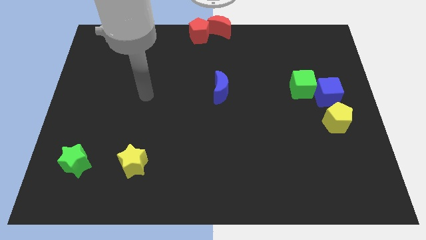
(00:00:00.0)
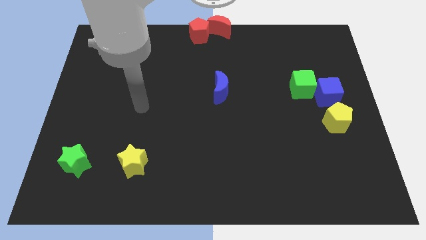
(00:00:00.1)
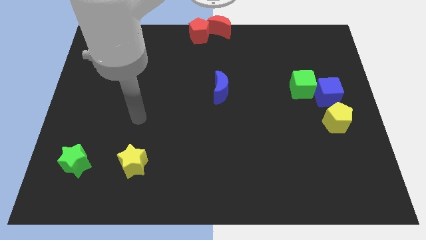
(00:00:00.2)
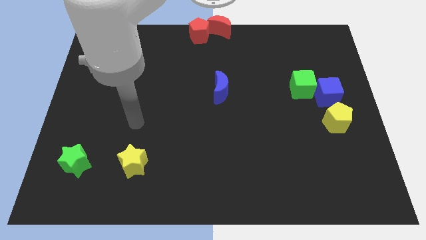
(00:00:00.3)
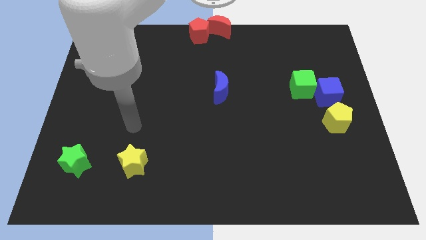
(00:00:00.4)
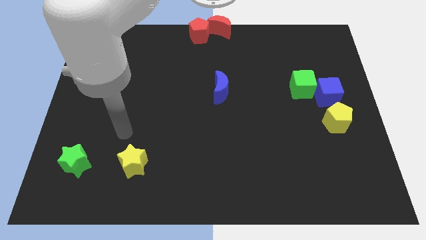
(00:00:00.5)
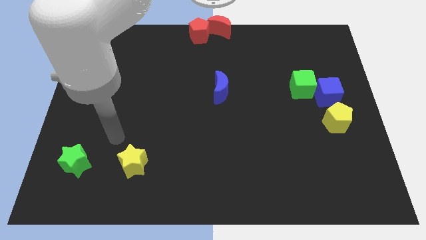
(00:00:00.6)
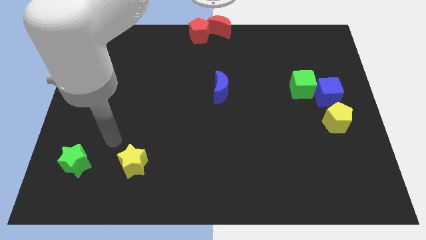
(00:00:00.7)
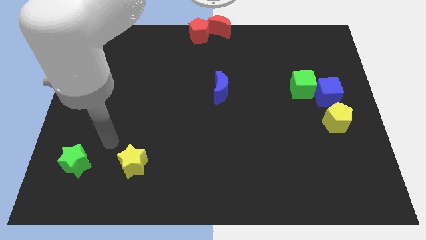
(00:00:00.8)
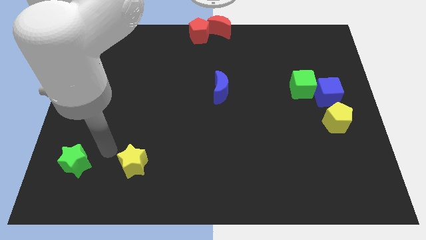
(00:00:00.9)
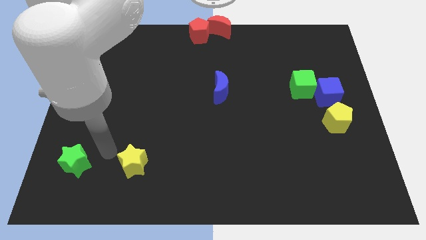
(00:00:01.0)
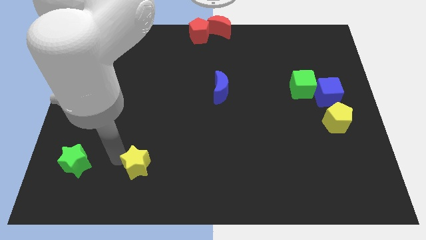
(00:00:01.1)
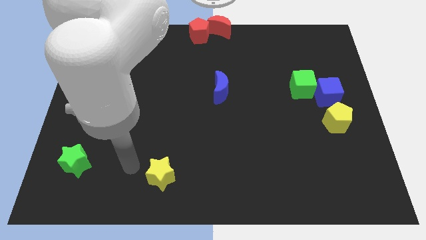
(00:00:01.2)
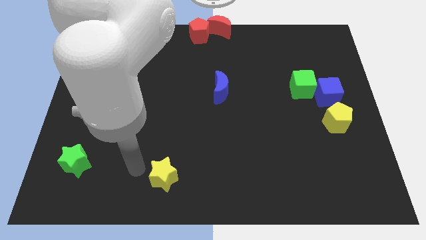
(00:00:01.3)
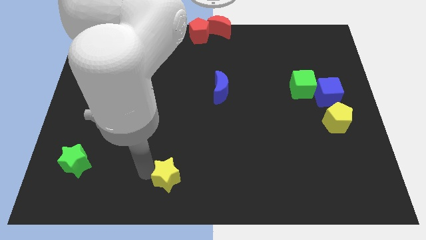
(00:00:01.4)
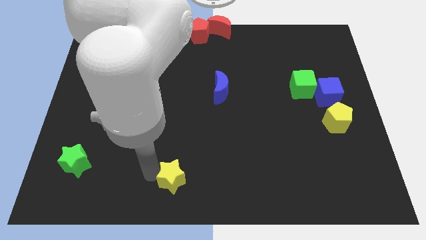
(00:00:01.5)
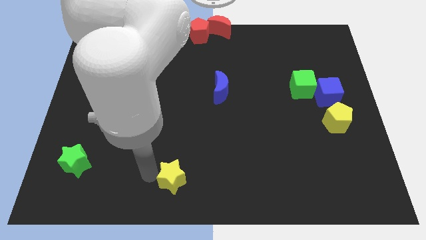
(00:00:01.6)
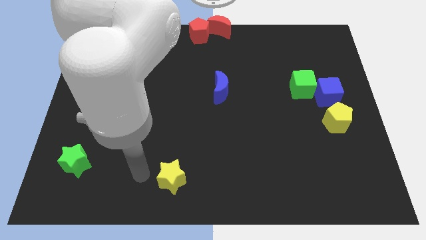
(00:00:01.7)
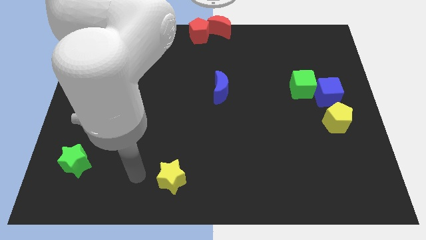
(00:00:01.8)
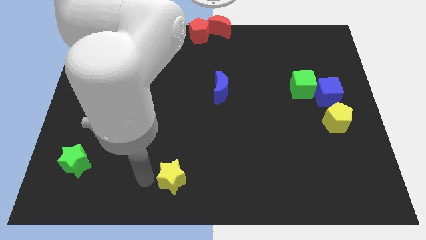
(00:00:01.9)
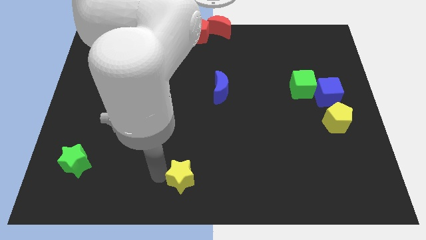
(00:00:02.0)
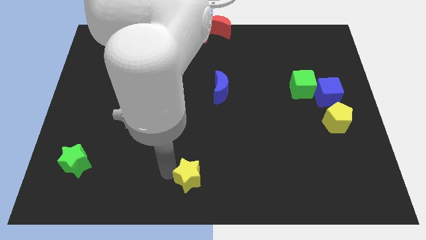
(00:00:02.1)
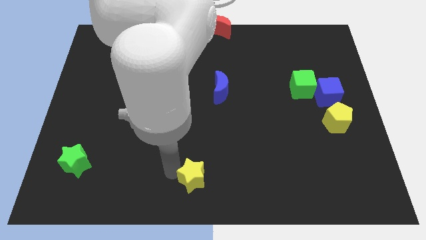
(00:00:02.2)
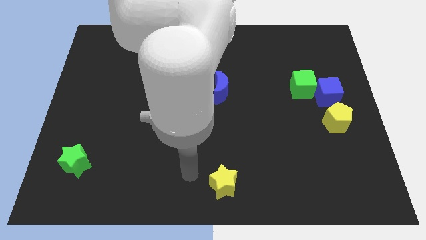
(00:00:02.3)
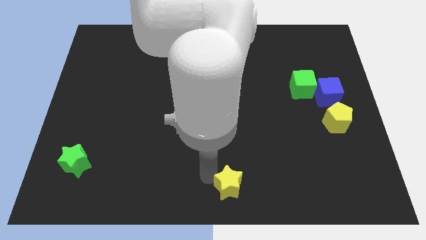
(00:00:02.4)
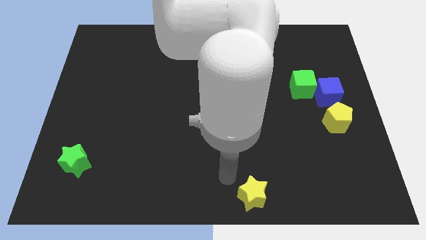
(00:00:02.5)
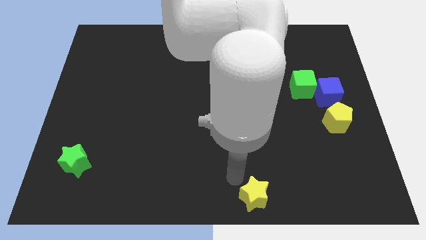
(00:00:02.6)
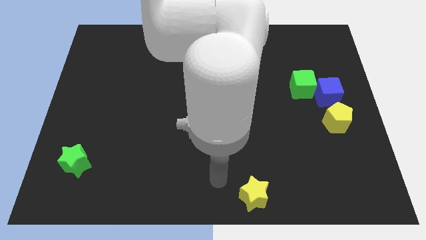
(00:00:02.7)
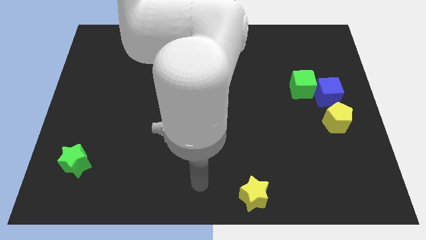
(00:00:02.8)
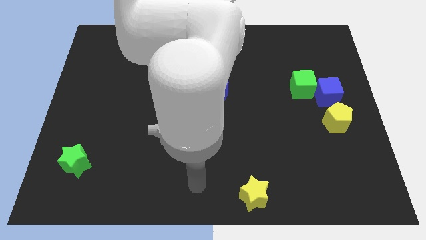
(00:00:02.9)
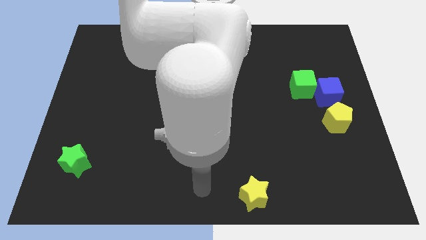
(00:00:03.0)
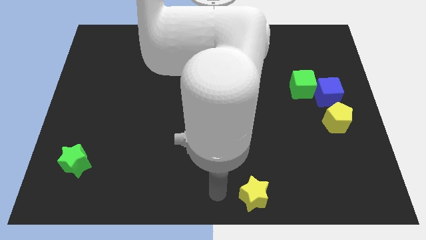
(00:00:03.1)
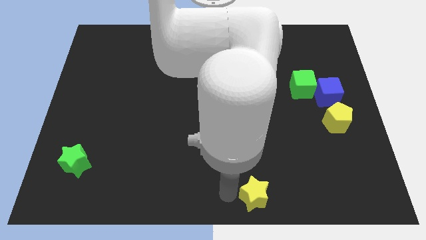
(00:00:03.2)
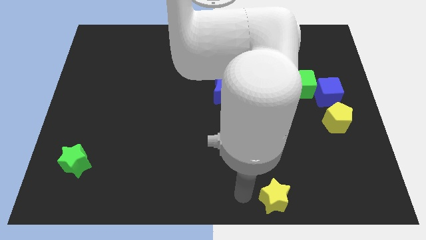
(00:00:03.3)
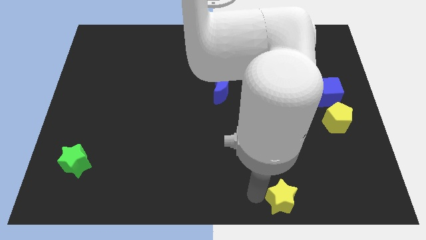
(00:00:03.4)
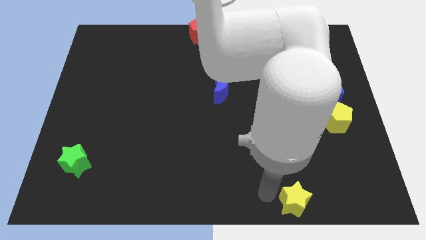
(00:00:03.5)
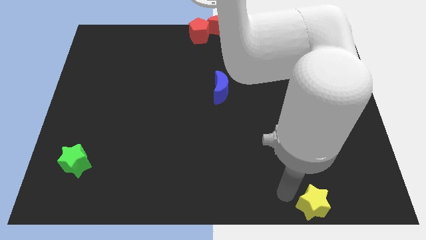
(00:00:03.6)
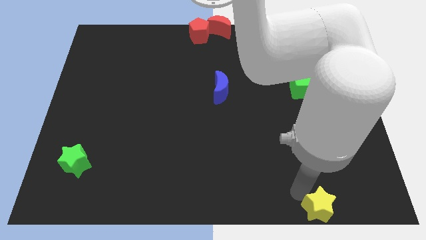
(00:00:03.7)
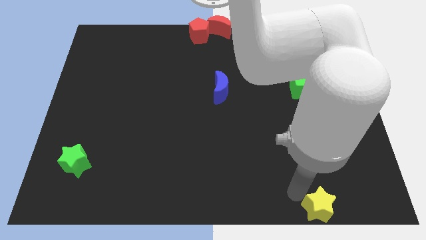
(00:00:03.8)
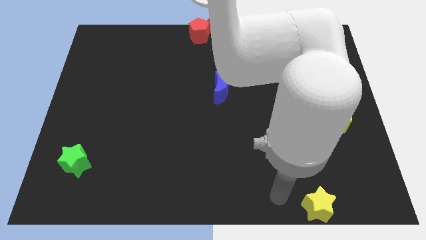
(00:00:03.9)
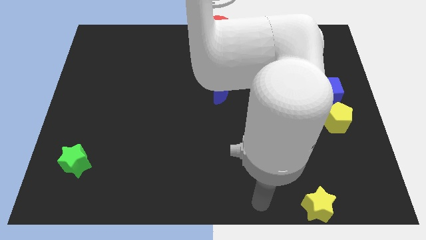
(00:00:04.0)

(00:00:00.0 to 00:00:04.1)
slide yellow star towards bottom right

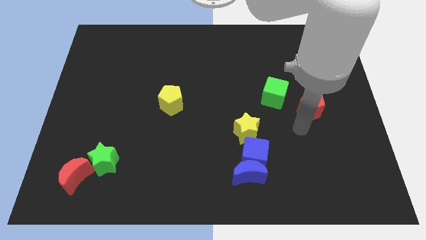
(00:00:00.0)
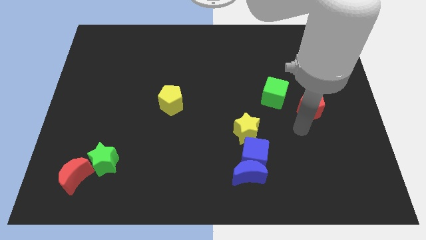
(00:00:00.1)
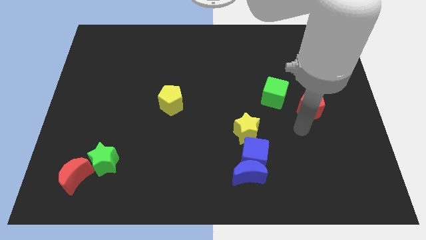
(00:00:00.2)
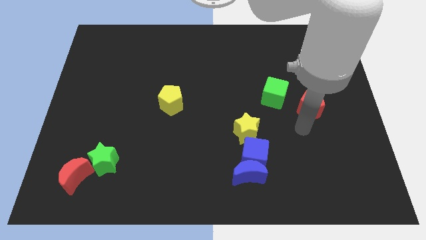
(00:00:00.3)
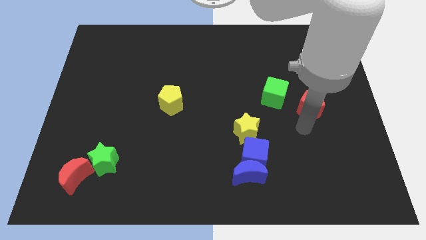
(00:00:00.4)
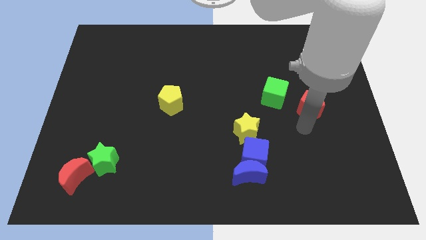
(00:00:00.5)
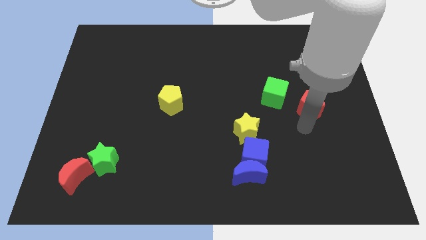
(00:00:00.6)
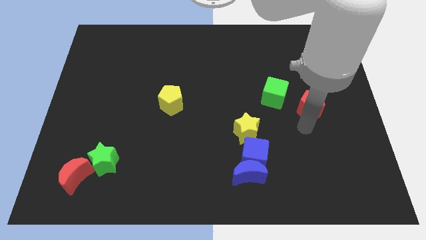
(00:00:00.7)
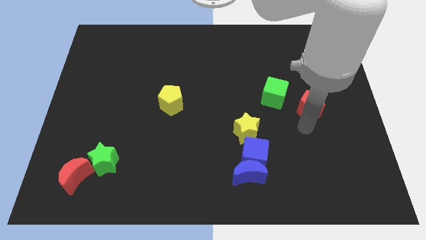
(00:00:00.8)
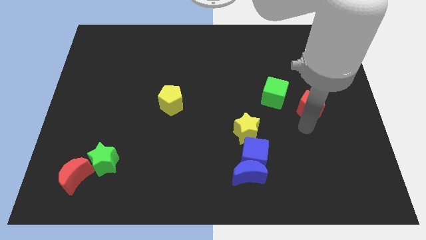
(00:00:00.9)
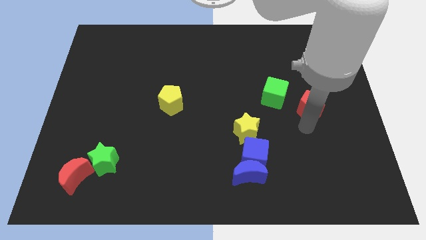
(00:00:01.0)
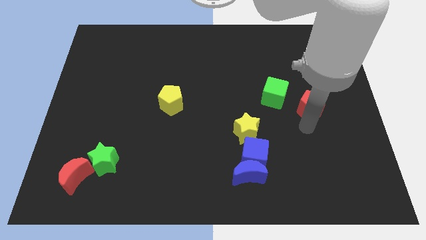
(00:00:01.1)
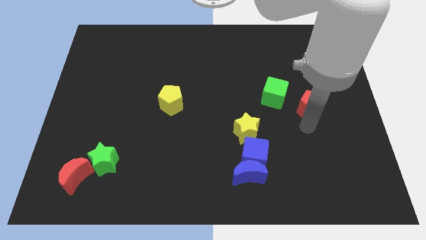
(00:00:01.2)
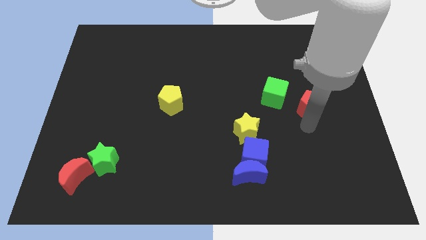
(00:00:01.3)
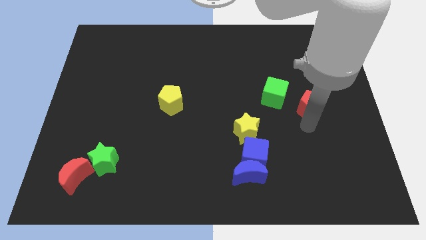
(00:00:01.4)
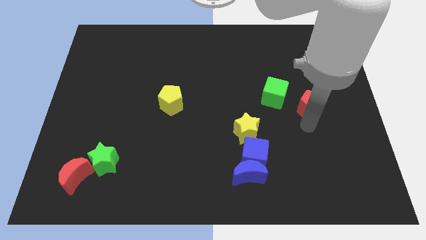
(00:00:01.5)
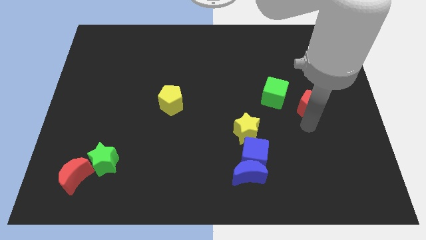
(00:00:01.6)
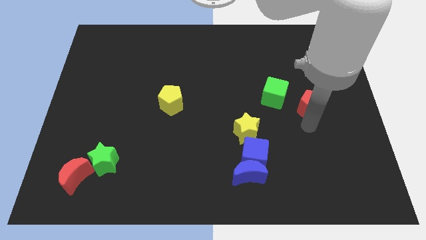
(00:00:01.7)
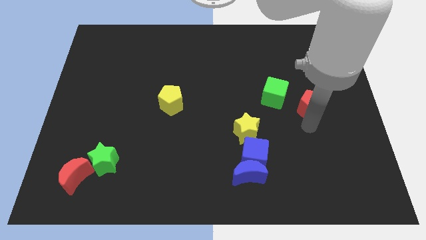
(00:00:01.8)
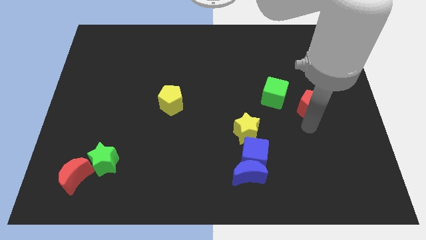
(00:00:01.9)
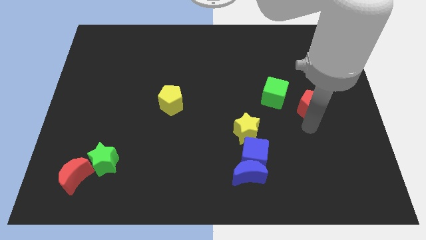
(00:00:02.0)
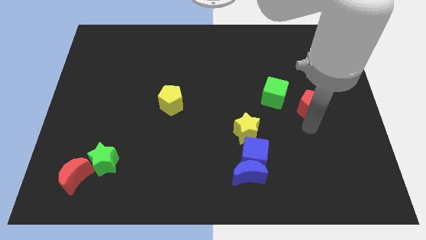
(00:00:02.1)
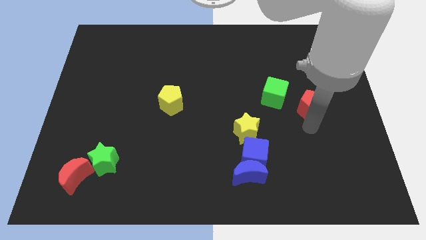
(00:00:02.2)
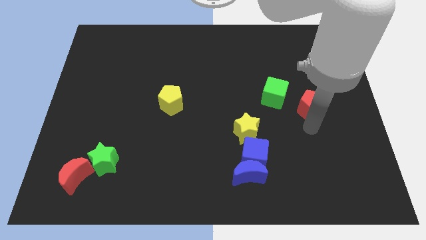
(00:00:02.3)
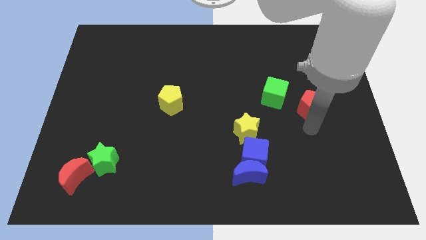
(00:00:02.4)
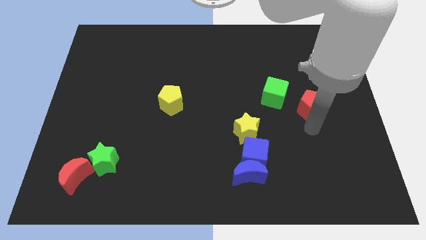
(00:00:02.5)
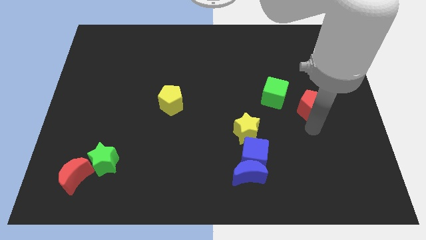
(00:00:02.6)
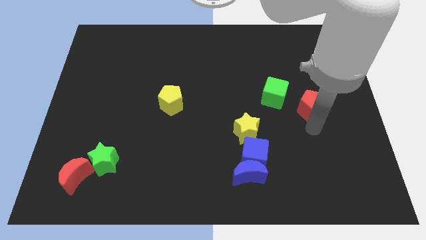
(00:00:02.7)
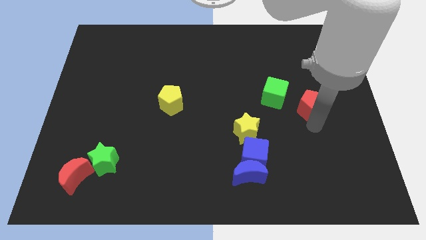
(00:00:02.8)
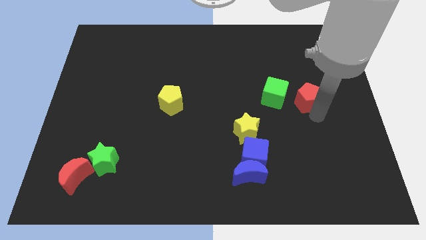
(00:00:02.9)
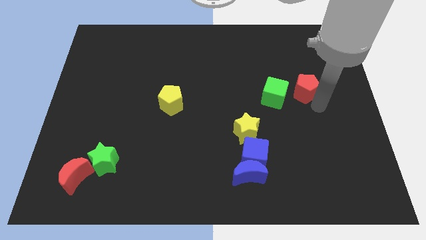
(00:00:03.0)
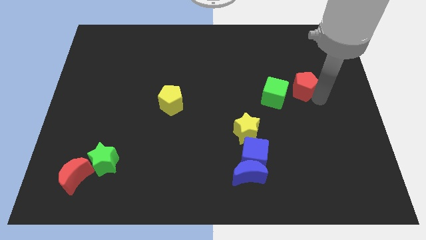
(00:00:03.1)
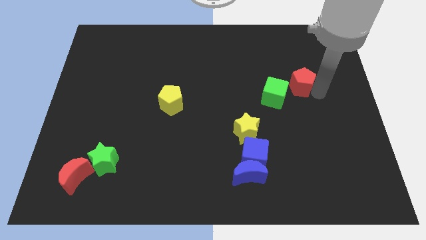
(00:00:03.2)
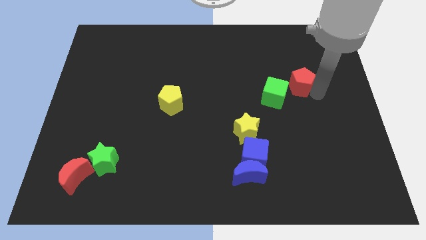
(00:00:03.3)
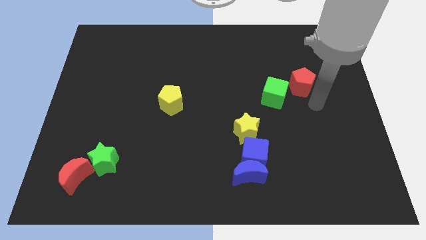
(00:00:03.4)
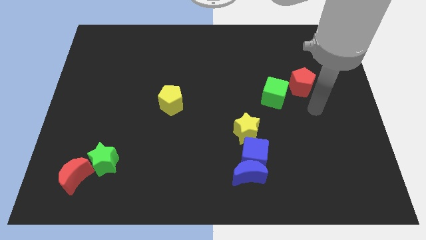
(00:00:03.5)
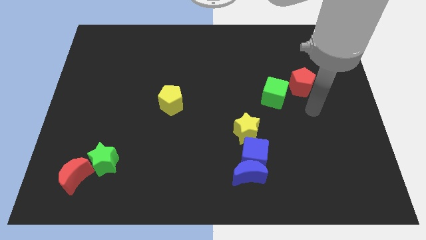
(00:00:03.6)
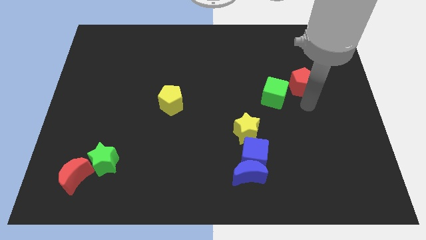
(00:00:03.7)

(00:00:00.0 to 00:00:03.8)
move the red pentagon upwards

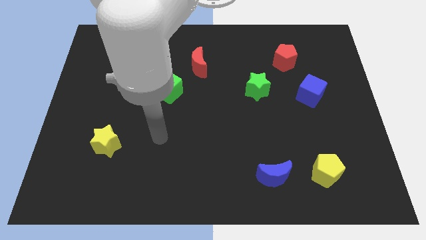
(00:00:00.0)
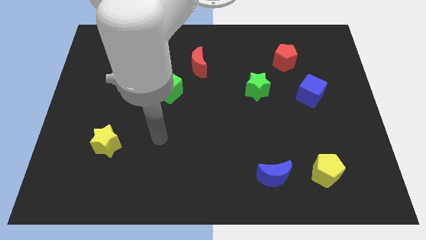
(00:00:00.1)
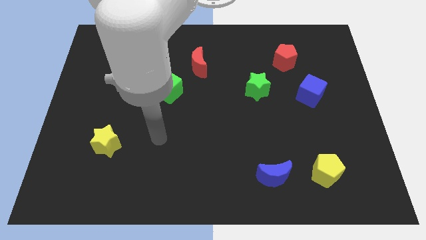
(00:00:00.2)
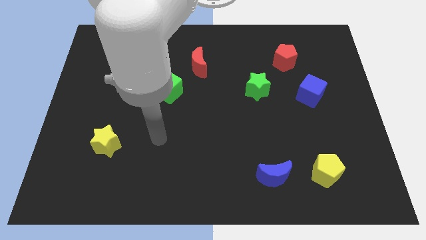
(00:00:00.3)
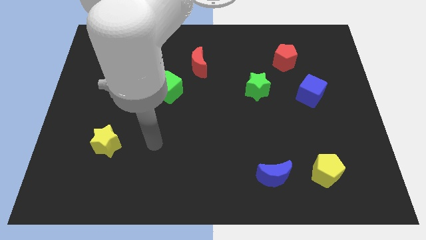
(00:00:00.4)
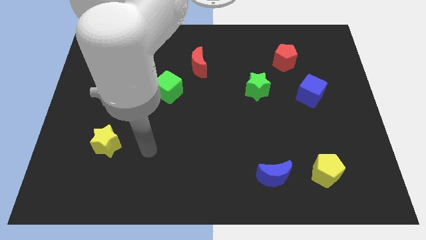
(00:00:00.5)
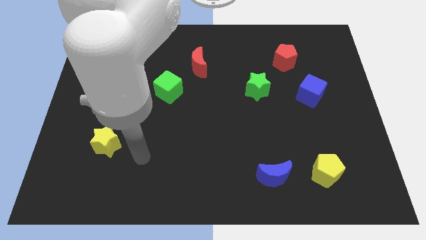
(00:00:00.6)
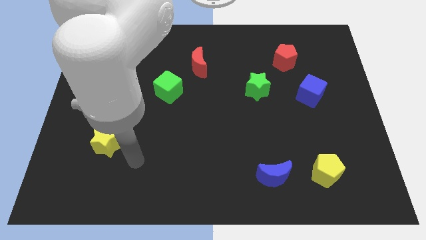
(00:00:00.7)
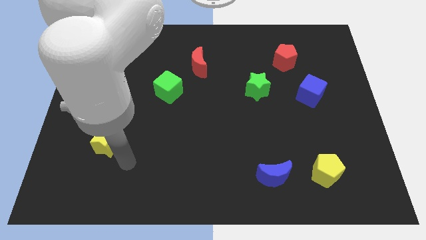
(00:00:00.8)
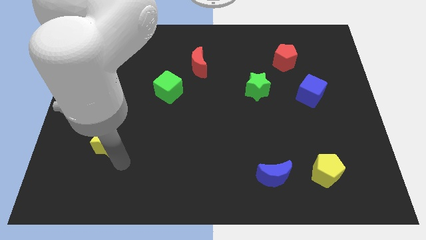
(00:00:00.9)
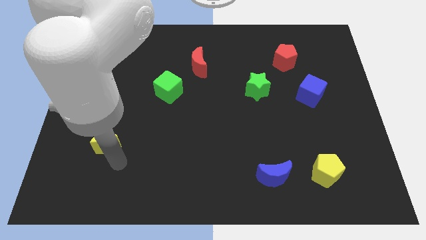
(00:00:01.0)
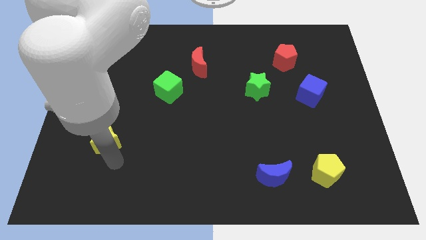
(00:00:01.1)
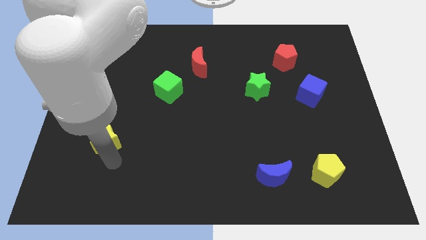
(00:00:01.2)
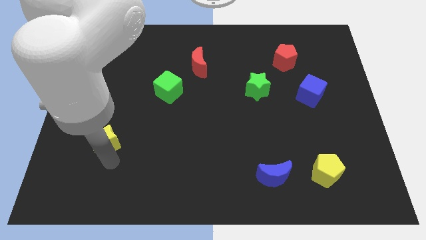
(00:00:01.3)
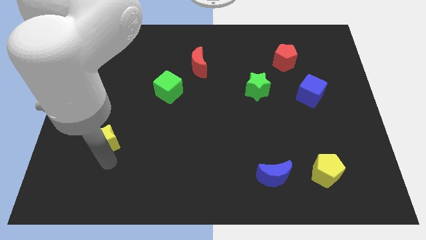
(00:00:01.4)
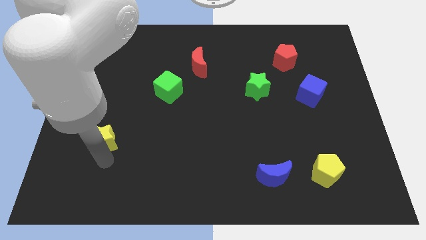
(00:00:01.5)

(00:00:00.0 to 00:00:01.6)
touch the bottom side of the yellow star
